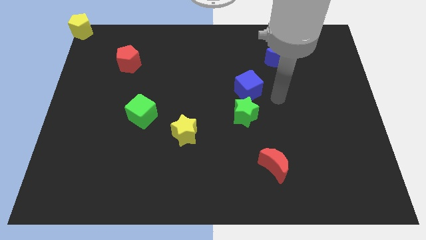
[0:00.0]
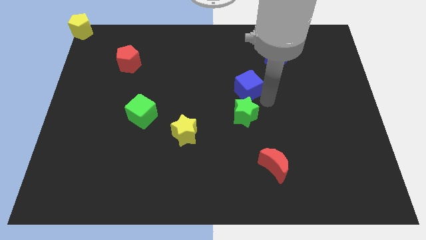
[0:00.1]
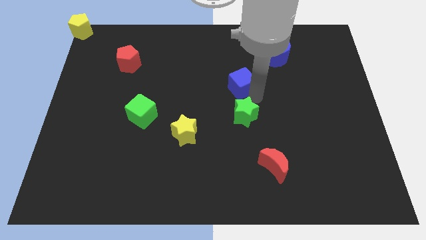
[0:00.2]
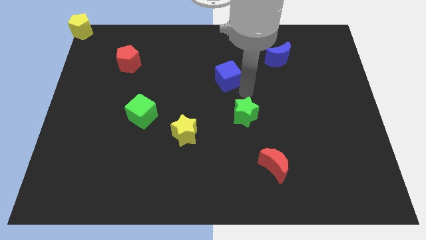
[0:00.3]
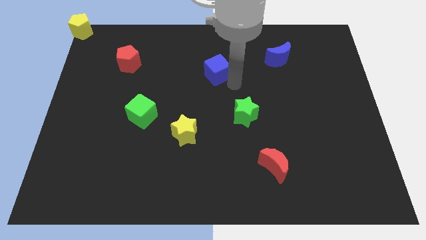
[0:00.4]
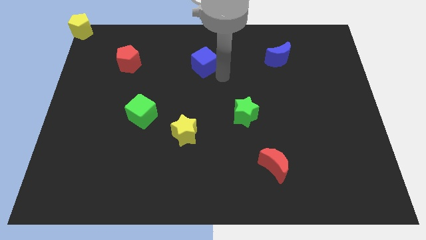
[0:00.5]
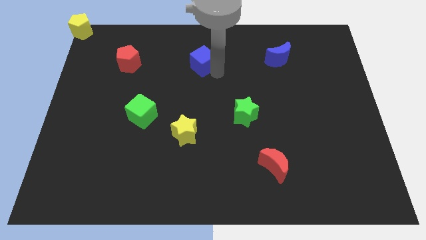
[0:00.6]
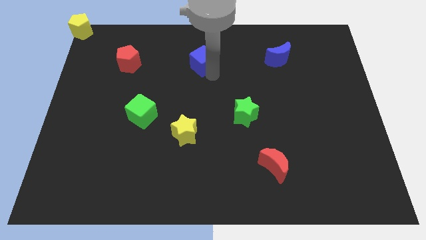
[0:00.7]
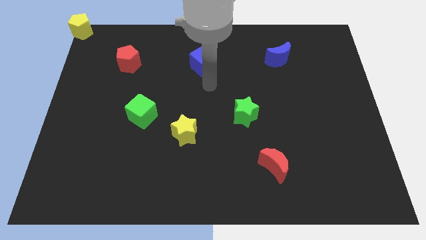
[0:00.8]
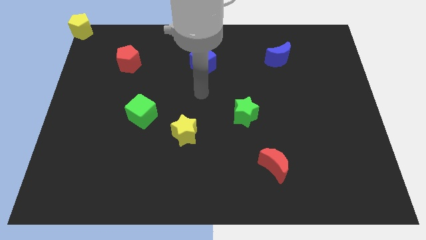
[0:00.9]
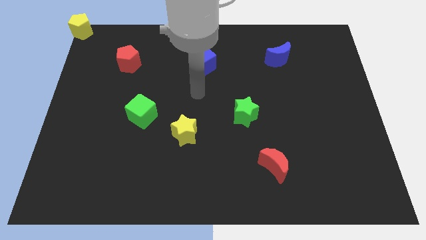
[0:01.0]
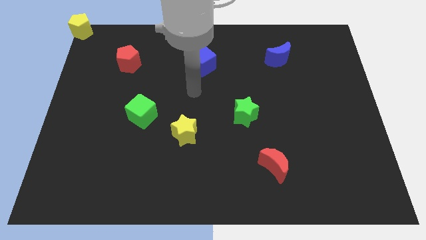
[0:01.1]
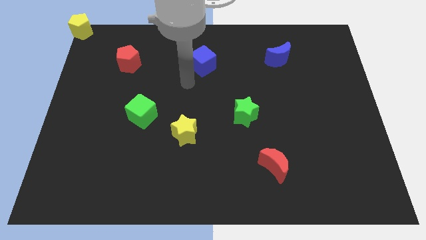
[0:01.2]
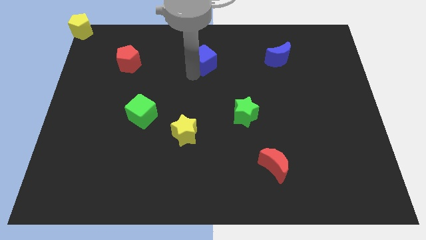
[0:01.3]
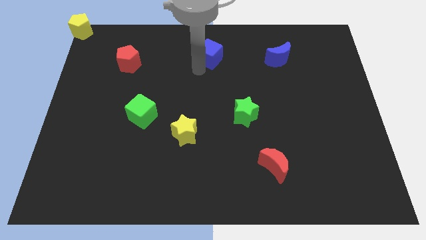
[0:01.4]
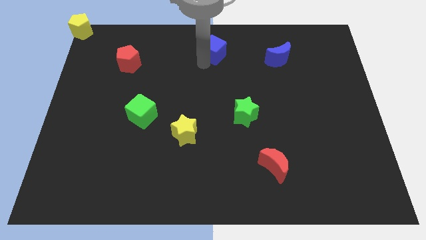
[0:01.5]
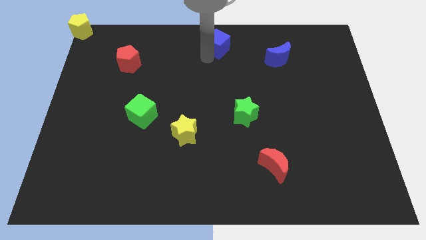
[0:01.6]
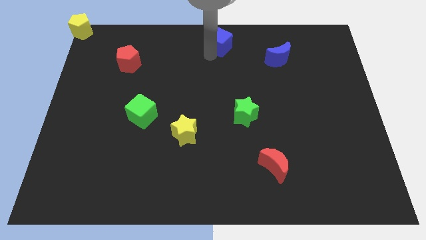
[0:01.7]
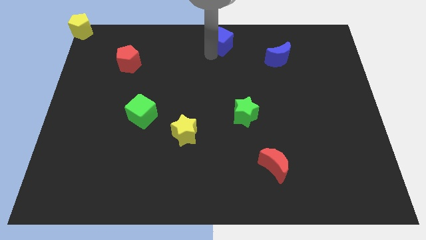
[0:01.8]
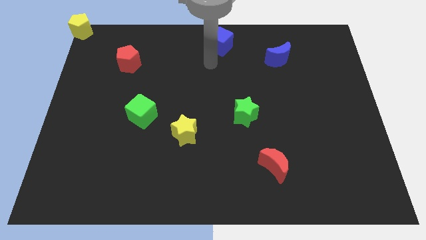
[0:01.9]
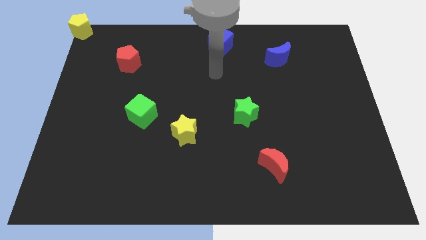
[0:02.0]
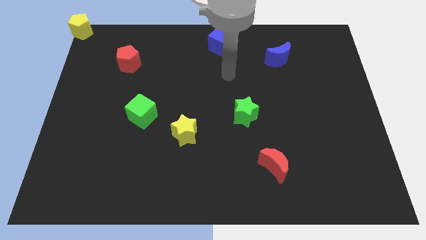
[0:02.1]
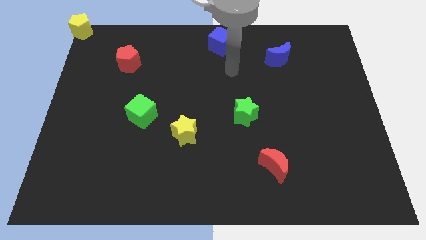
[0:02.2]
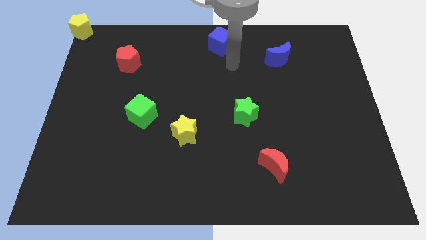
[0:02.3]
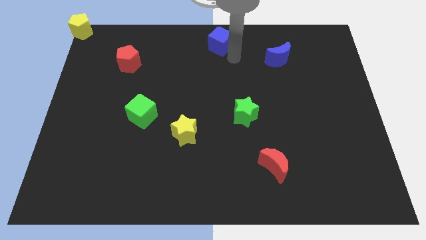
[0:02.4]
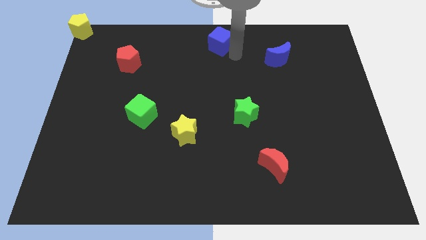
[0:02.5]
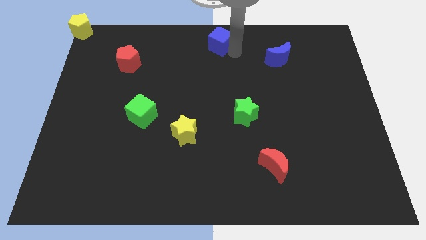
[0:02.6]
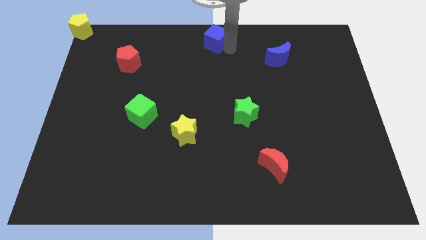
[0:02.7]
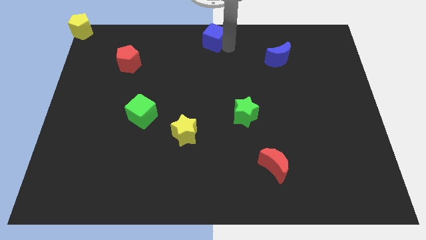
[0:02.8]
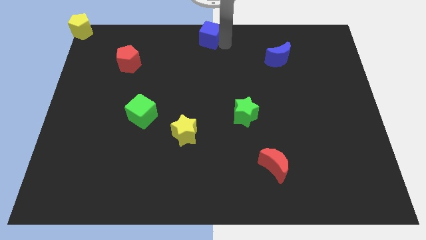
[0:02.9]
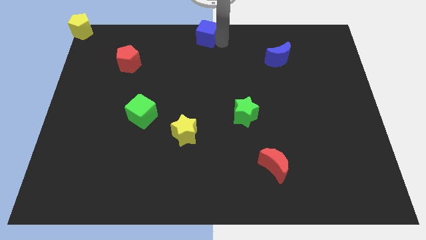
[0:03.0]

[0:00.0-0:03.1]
place the blue cube at the top center of the board

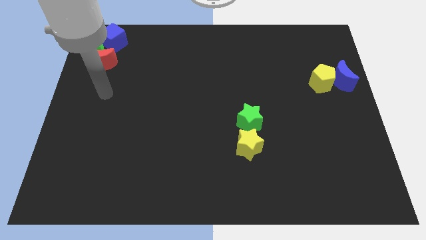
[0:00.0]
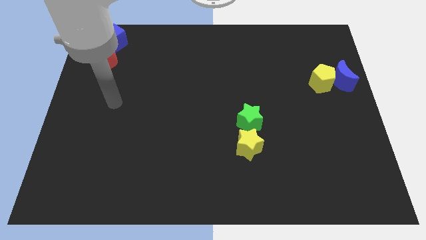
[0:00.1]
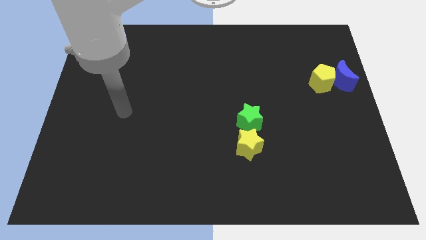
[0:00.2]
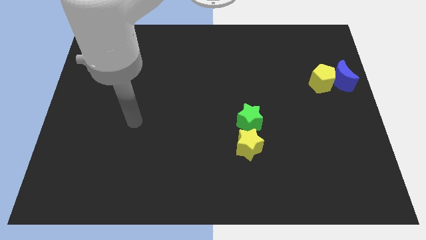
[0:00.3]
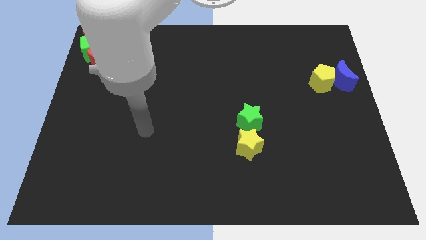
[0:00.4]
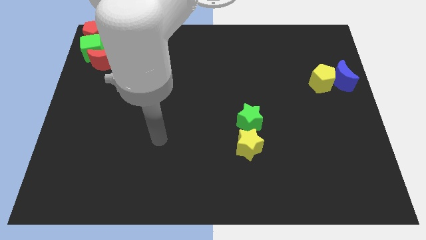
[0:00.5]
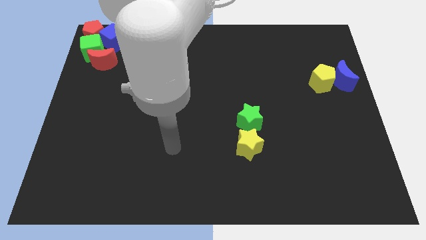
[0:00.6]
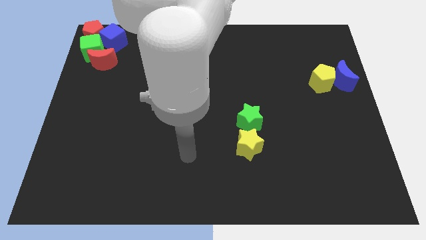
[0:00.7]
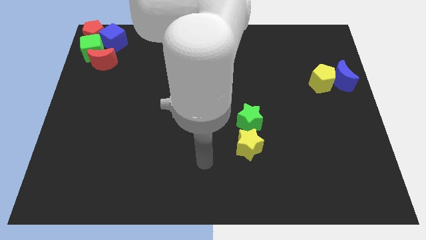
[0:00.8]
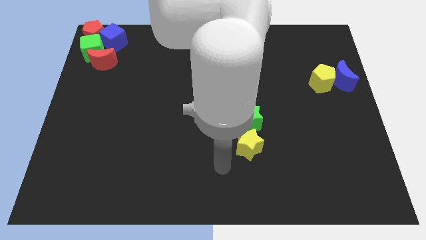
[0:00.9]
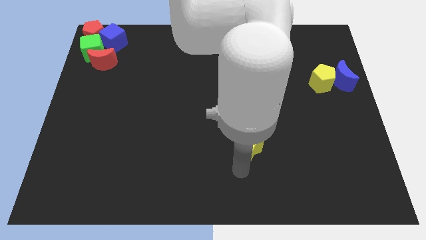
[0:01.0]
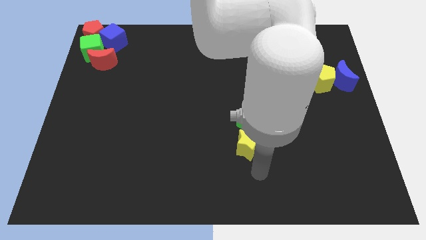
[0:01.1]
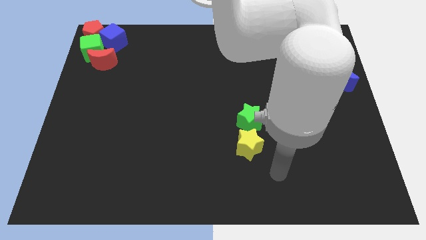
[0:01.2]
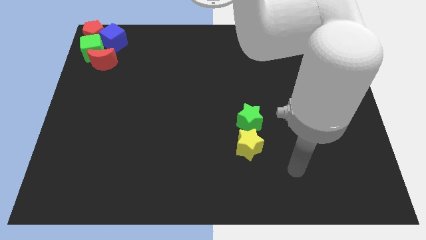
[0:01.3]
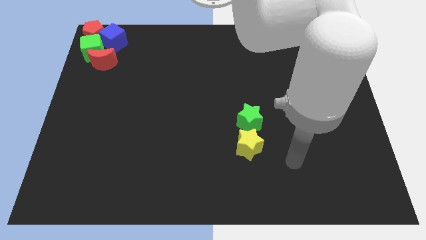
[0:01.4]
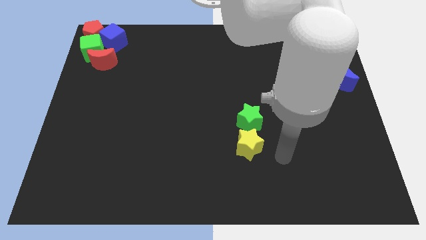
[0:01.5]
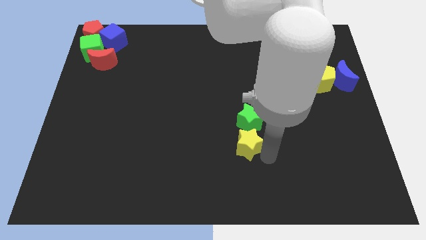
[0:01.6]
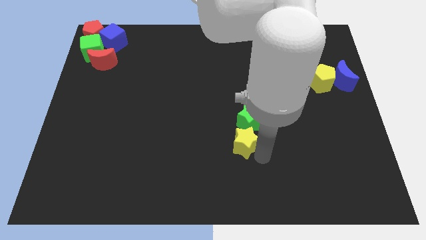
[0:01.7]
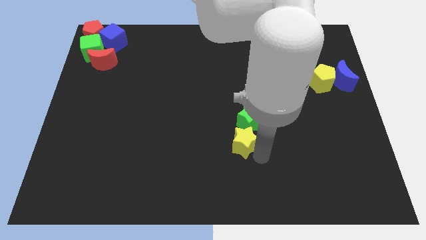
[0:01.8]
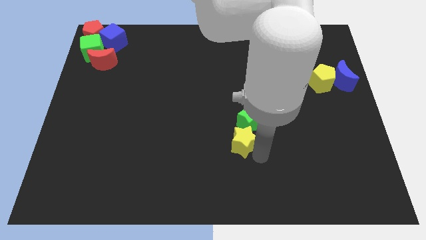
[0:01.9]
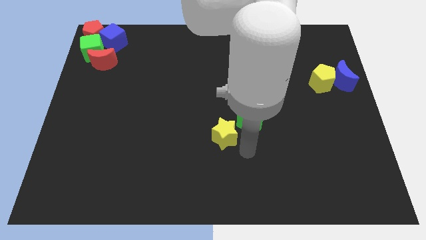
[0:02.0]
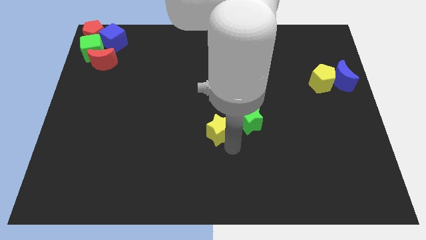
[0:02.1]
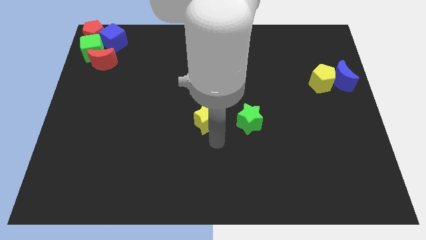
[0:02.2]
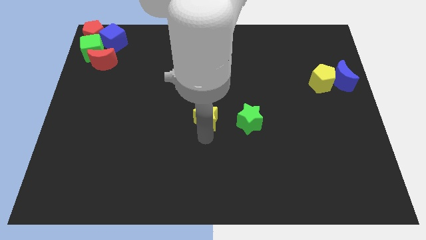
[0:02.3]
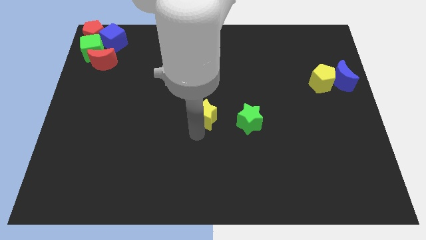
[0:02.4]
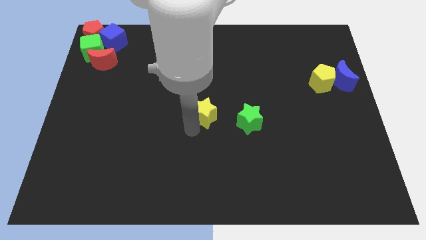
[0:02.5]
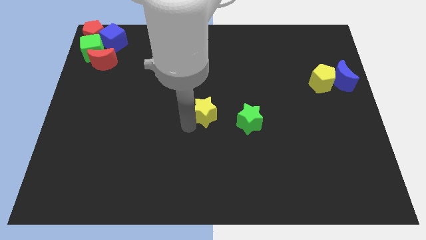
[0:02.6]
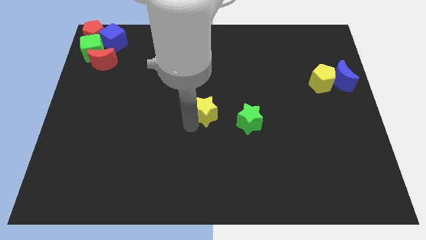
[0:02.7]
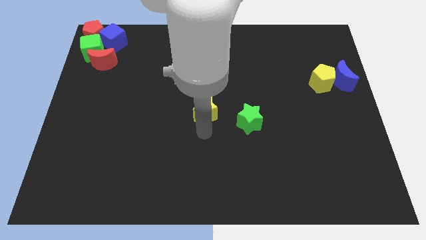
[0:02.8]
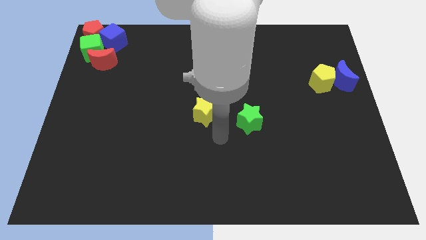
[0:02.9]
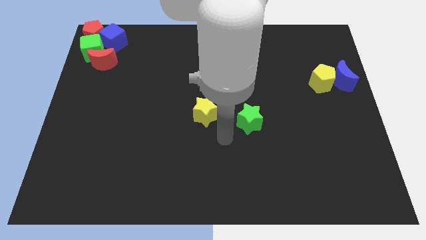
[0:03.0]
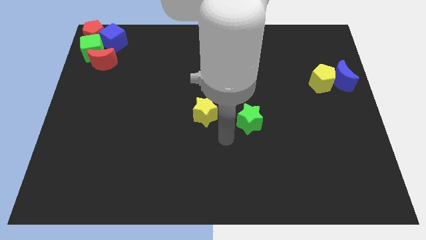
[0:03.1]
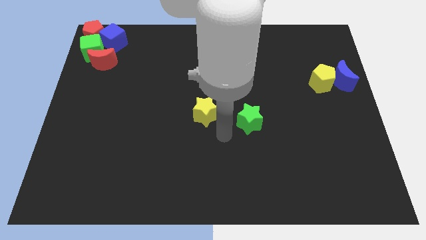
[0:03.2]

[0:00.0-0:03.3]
move the yellow star to the center of the board

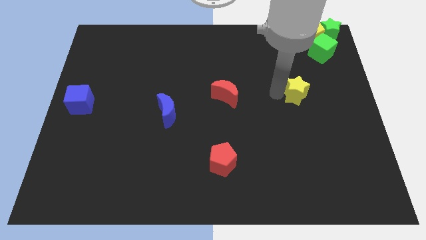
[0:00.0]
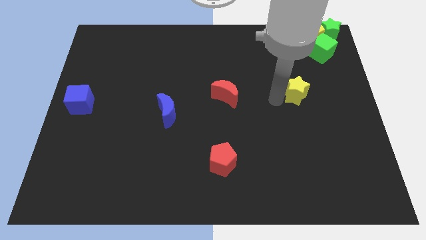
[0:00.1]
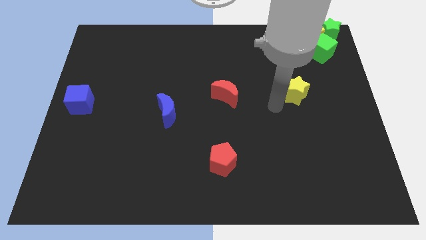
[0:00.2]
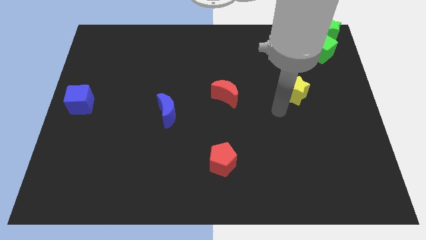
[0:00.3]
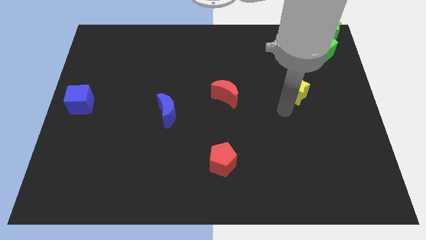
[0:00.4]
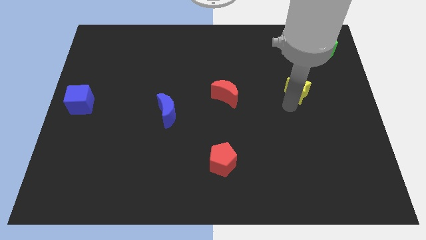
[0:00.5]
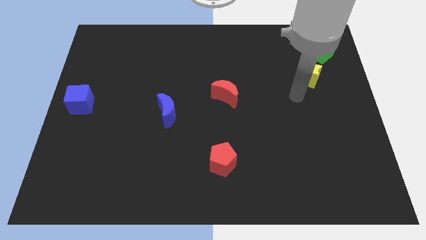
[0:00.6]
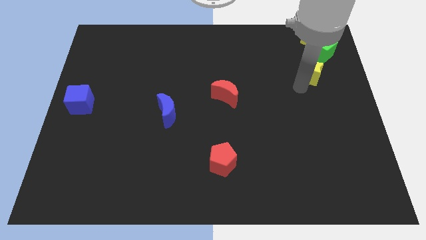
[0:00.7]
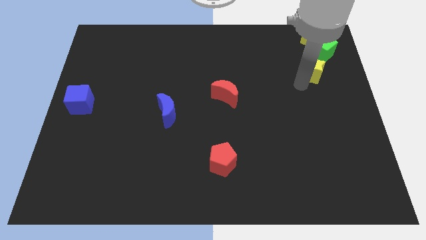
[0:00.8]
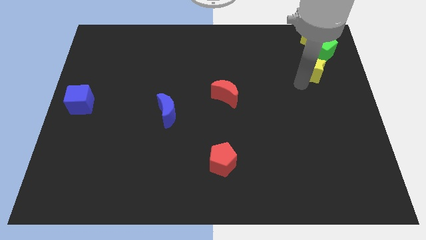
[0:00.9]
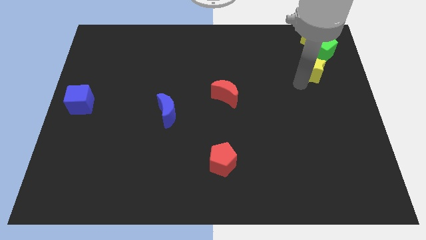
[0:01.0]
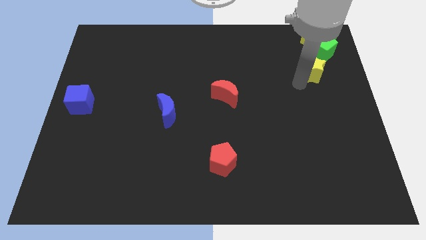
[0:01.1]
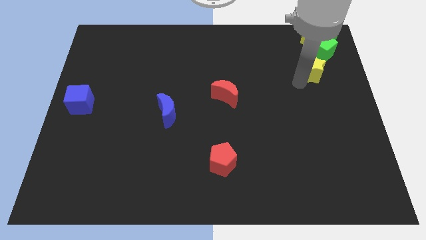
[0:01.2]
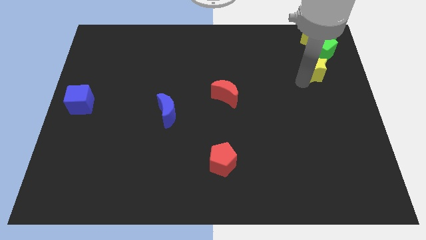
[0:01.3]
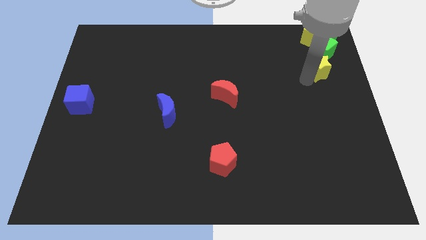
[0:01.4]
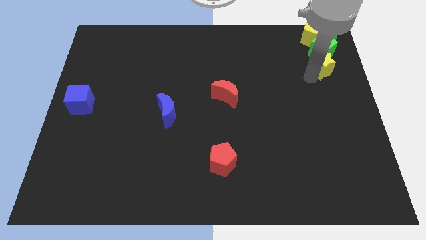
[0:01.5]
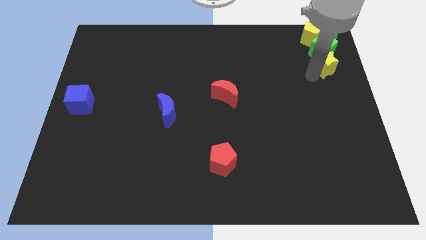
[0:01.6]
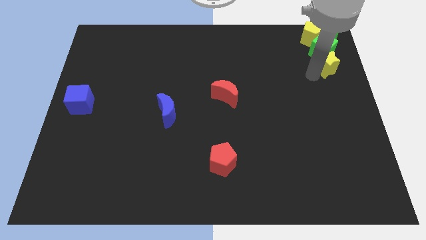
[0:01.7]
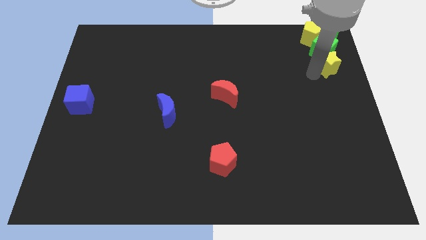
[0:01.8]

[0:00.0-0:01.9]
move the yellow star into the green cube

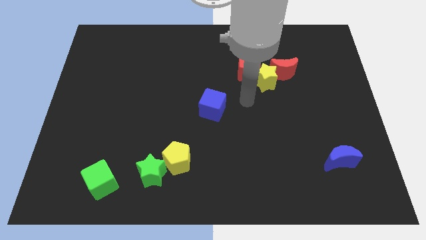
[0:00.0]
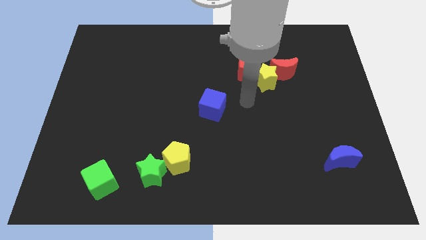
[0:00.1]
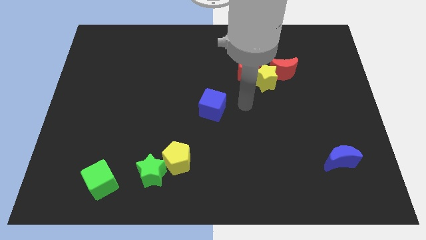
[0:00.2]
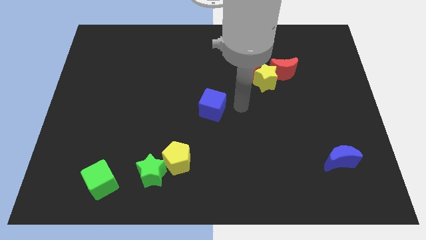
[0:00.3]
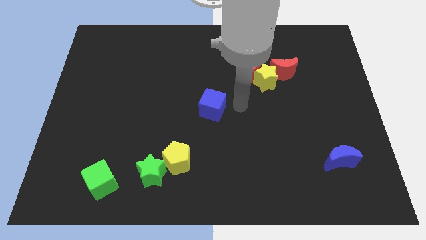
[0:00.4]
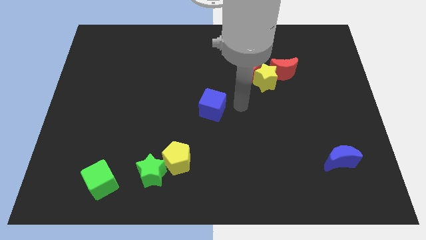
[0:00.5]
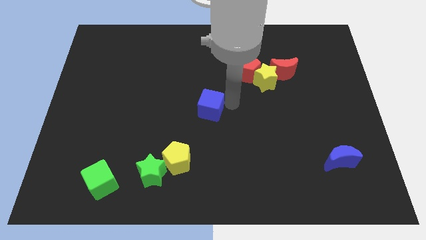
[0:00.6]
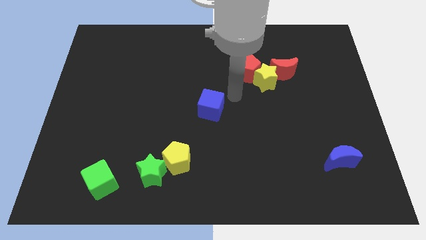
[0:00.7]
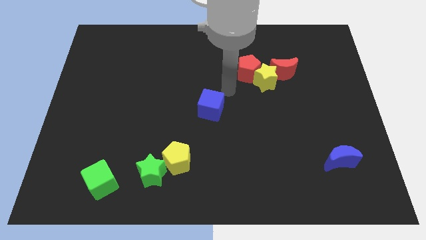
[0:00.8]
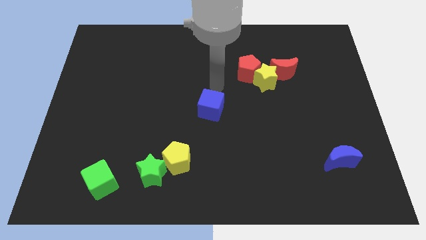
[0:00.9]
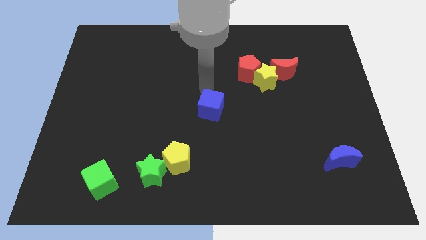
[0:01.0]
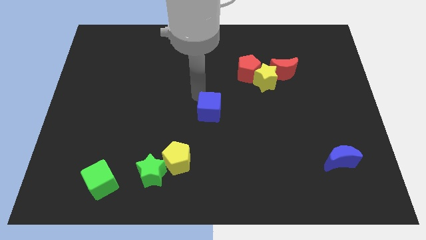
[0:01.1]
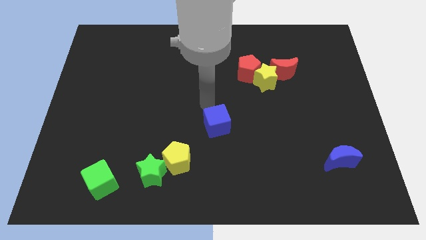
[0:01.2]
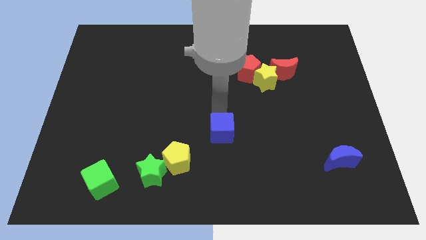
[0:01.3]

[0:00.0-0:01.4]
push the blue cube slightly to the bottom
